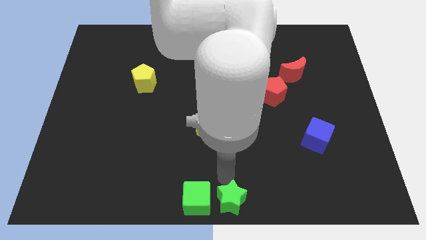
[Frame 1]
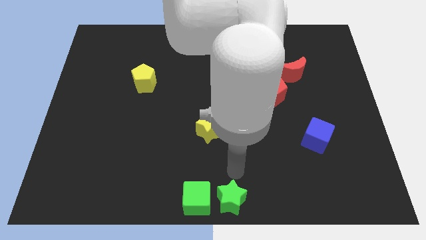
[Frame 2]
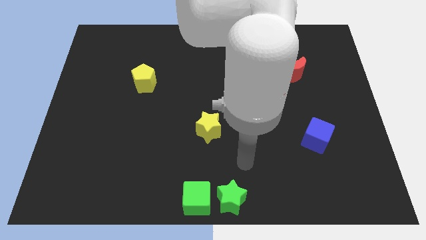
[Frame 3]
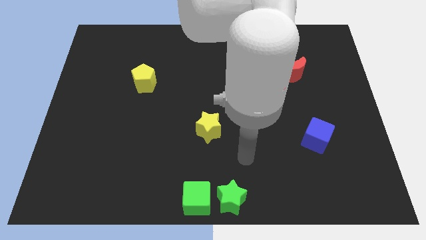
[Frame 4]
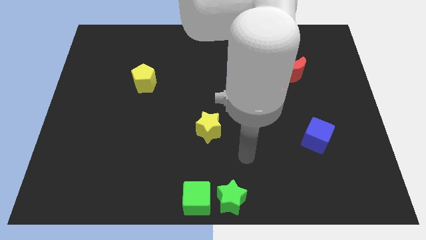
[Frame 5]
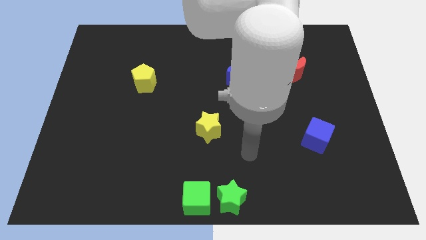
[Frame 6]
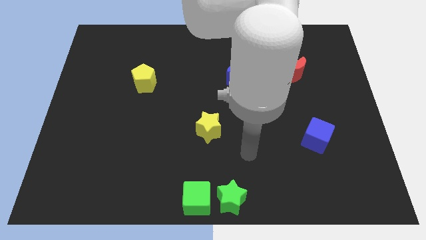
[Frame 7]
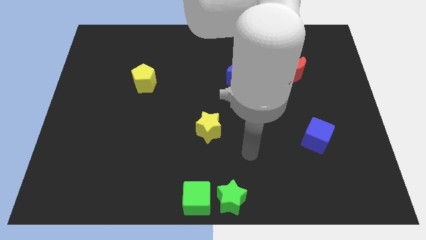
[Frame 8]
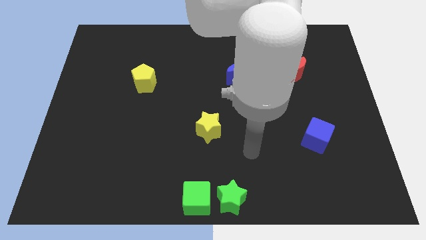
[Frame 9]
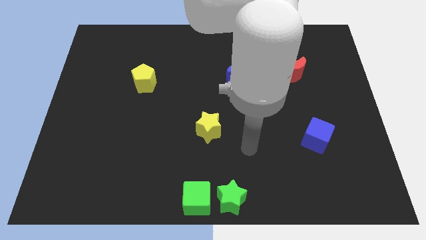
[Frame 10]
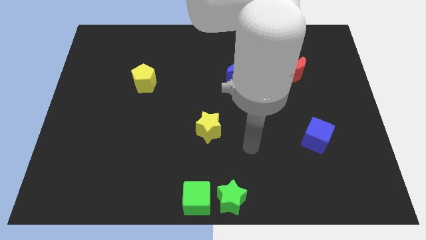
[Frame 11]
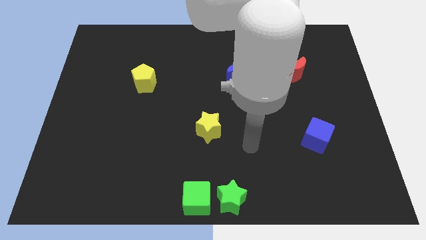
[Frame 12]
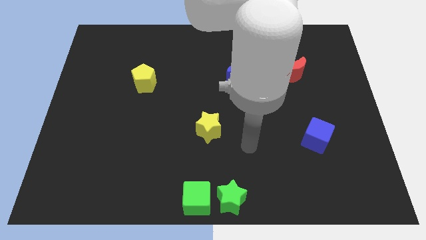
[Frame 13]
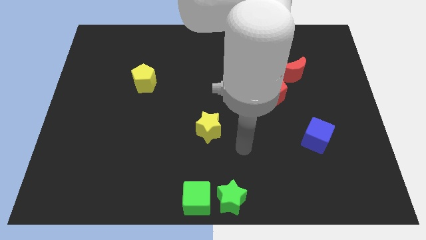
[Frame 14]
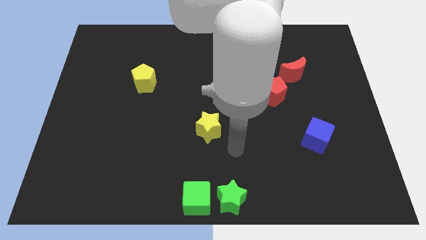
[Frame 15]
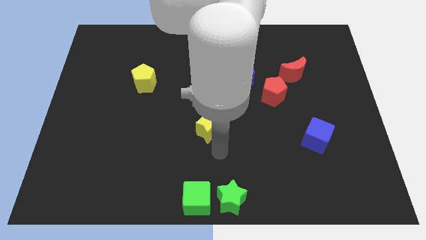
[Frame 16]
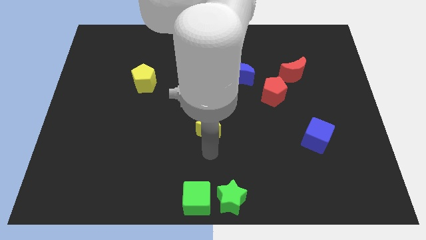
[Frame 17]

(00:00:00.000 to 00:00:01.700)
drag your arm towards yellow star

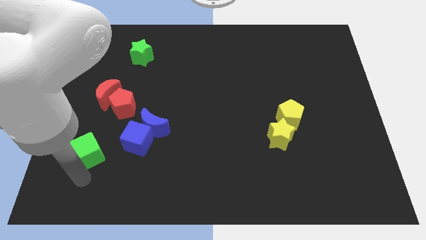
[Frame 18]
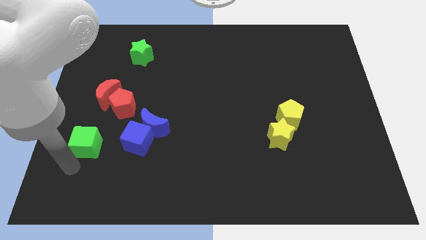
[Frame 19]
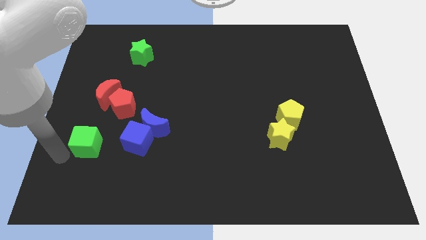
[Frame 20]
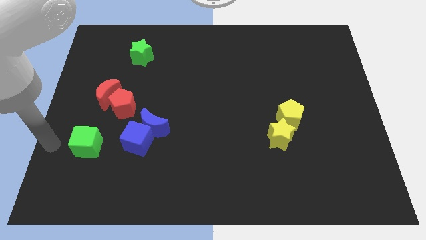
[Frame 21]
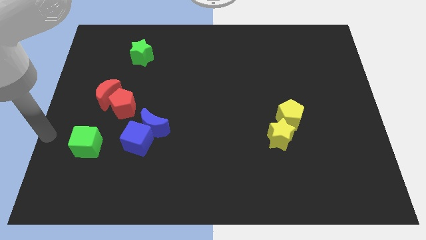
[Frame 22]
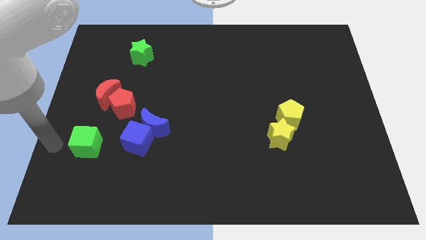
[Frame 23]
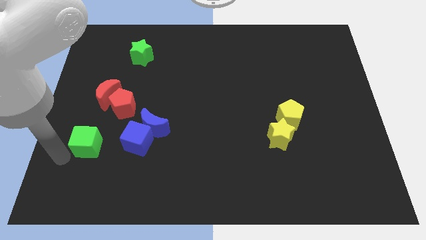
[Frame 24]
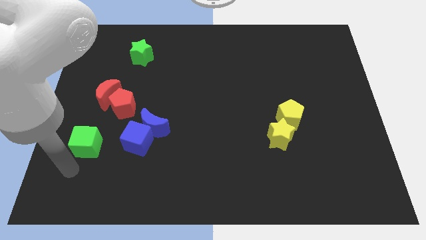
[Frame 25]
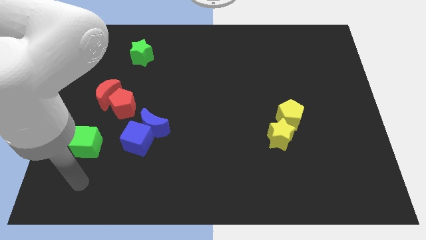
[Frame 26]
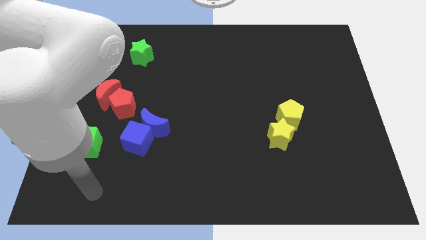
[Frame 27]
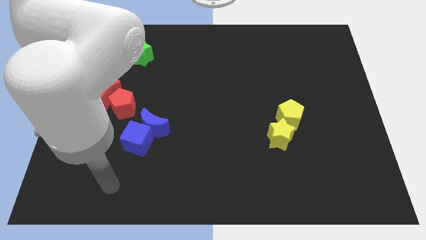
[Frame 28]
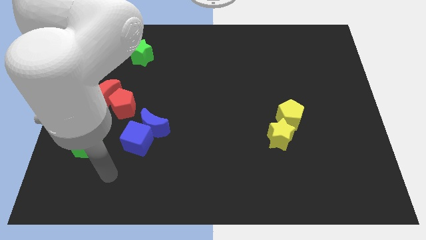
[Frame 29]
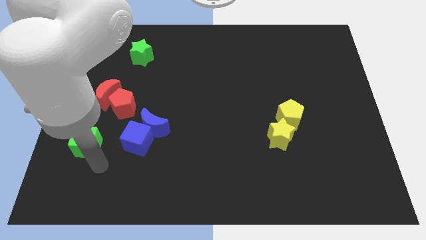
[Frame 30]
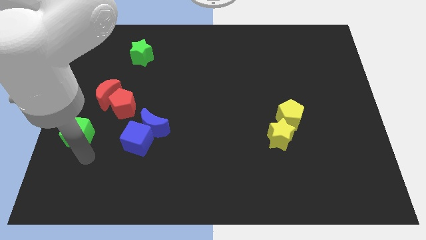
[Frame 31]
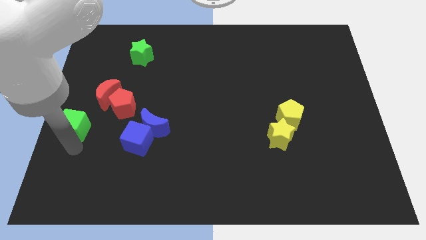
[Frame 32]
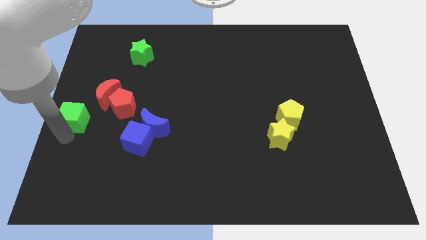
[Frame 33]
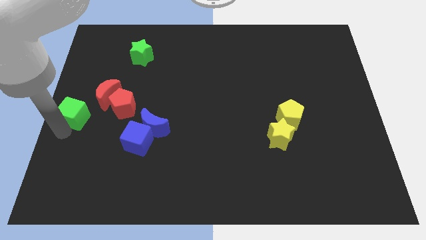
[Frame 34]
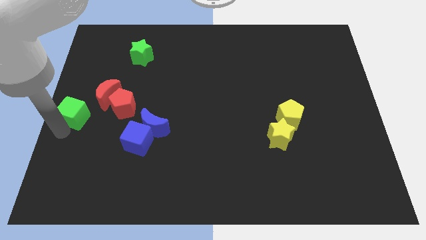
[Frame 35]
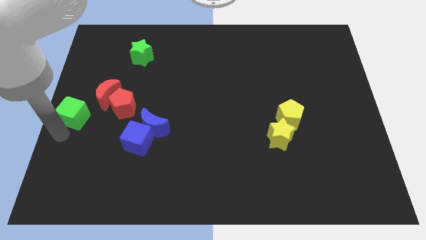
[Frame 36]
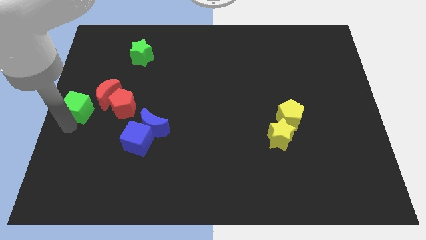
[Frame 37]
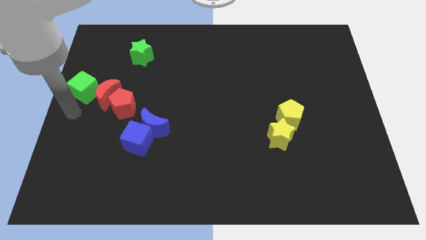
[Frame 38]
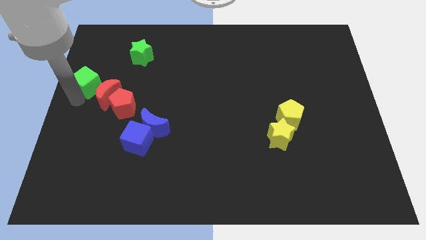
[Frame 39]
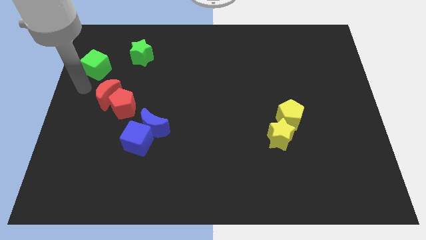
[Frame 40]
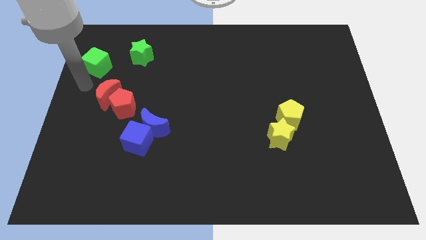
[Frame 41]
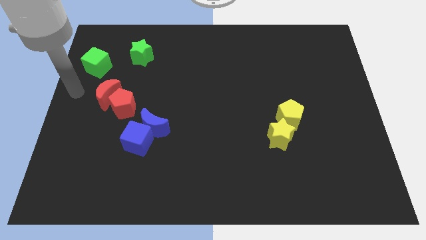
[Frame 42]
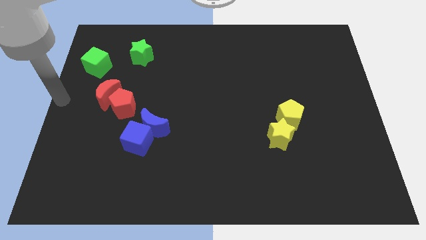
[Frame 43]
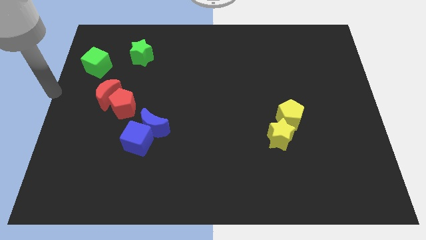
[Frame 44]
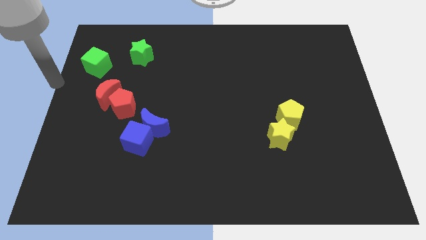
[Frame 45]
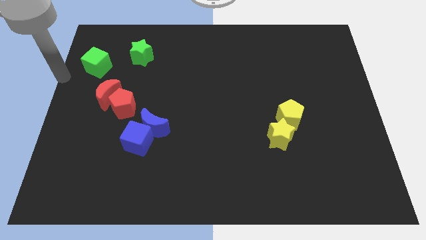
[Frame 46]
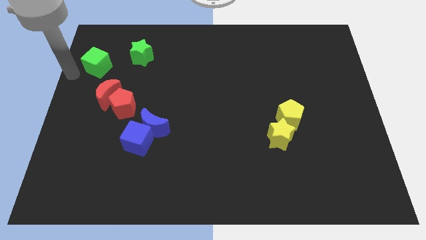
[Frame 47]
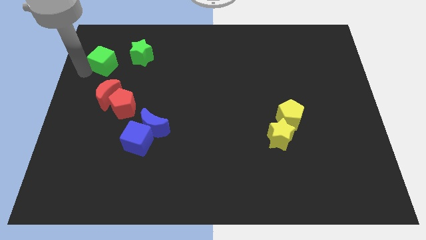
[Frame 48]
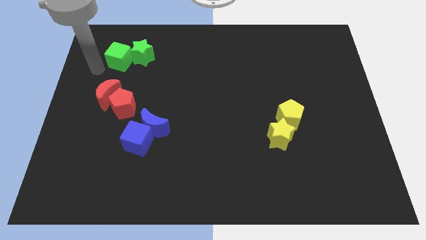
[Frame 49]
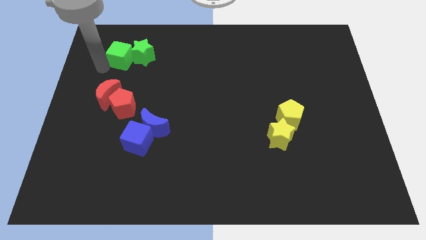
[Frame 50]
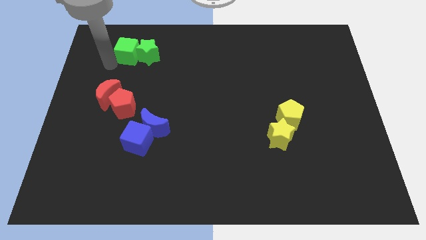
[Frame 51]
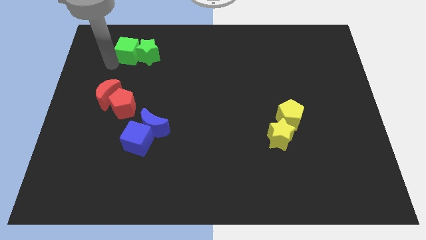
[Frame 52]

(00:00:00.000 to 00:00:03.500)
push the green cube to the left of the green star

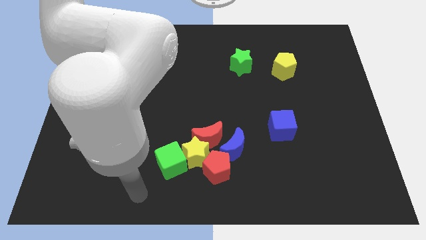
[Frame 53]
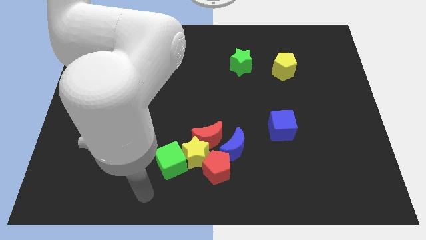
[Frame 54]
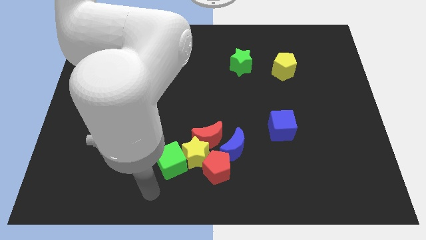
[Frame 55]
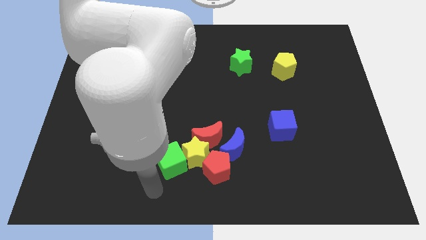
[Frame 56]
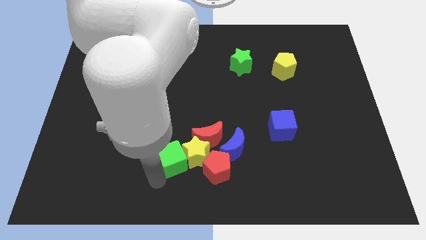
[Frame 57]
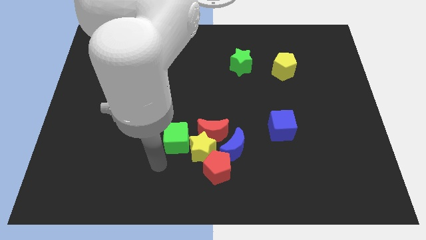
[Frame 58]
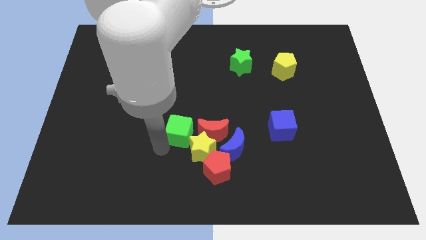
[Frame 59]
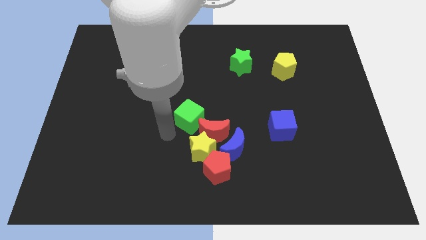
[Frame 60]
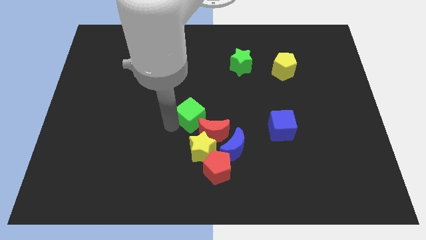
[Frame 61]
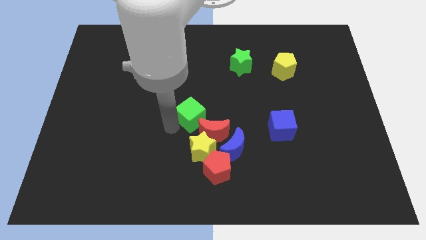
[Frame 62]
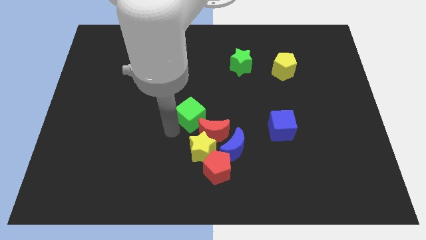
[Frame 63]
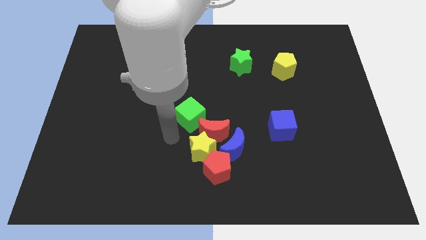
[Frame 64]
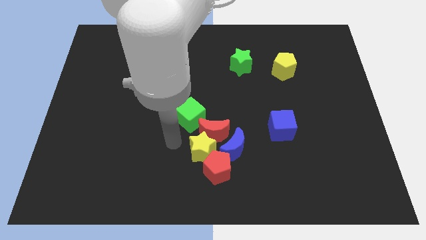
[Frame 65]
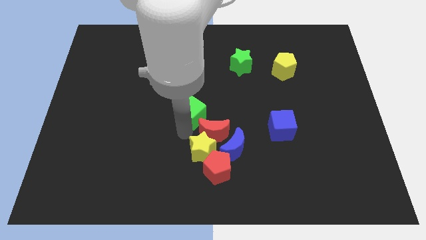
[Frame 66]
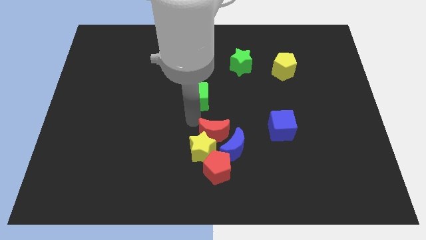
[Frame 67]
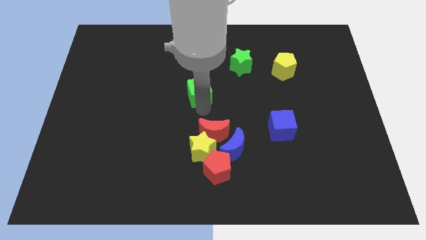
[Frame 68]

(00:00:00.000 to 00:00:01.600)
push the green cube towards center

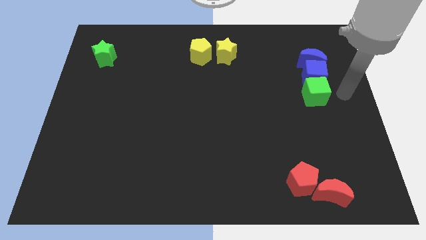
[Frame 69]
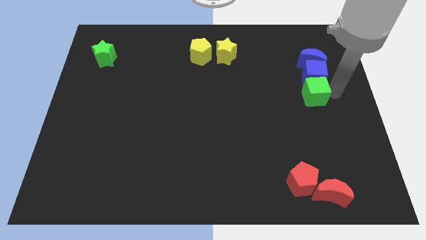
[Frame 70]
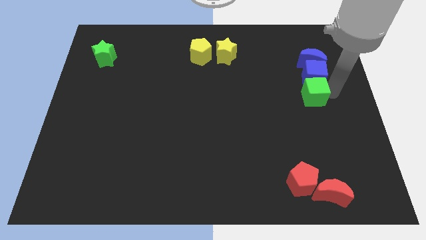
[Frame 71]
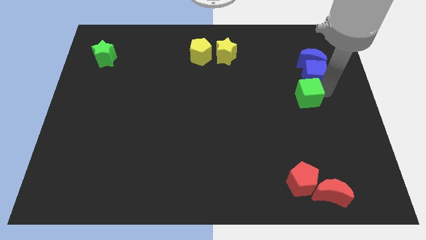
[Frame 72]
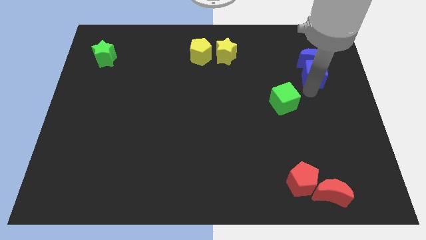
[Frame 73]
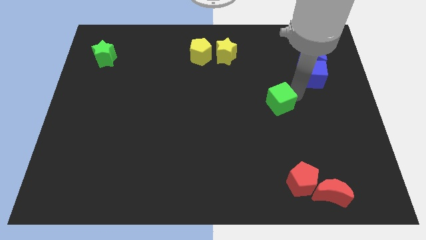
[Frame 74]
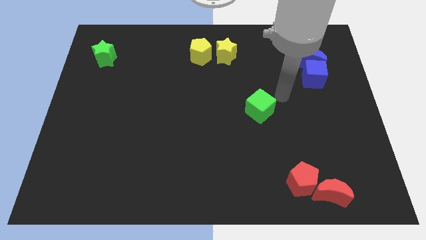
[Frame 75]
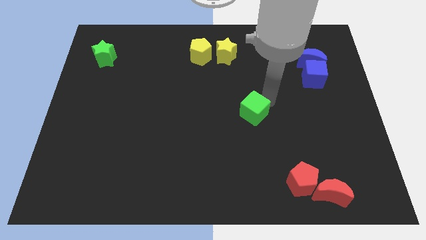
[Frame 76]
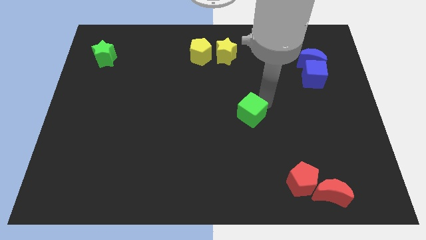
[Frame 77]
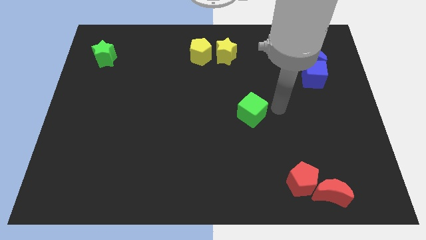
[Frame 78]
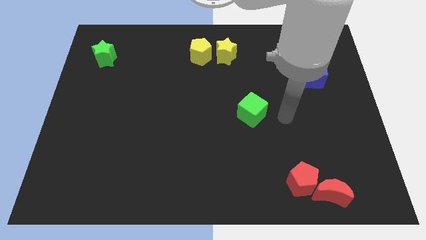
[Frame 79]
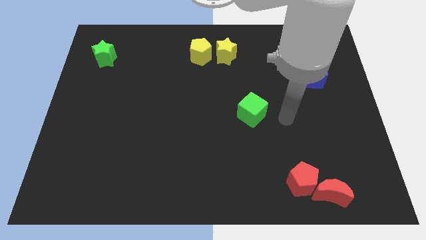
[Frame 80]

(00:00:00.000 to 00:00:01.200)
separate the green cube from the blue cube

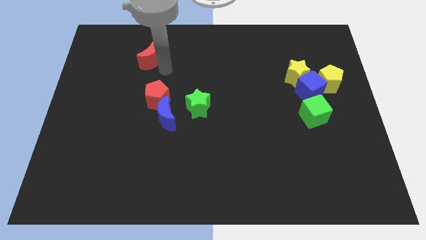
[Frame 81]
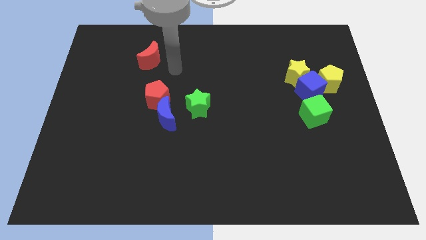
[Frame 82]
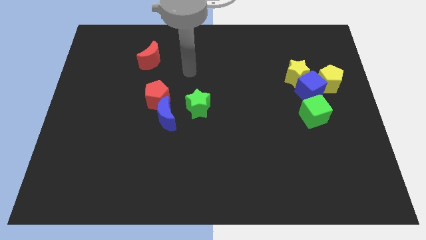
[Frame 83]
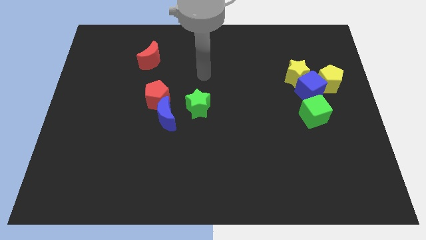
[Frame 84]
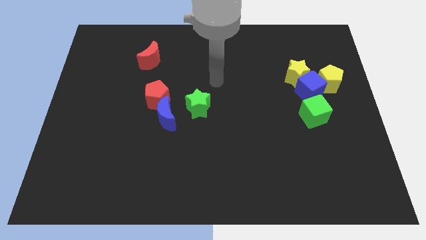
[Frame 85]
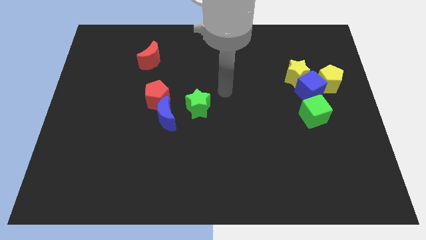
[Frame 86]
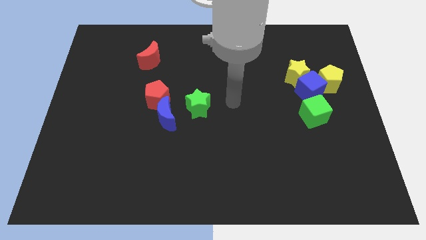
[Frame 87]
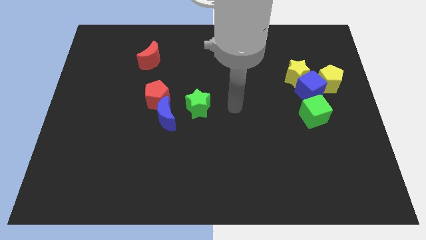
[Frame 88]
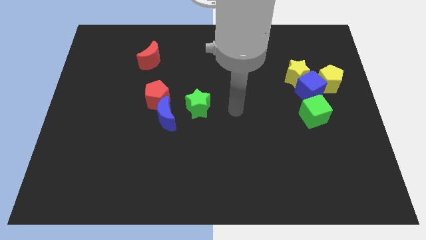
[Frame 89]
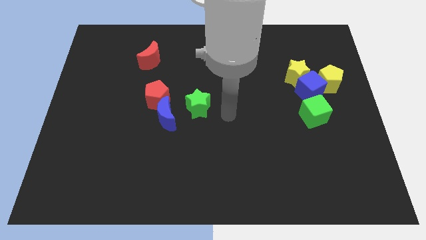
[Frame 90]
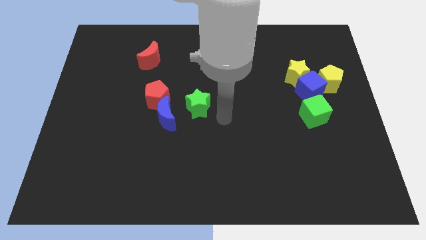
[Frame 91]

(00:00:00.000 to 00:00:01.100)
move your arm to the center of the board
